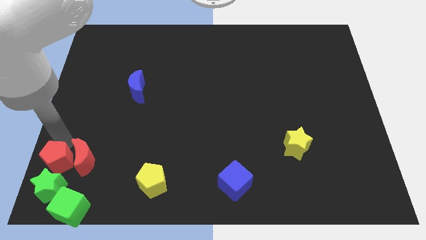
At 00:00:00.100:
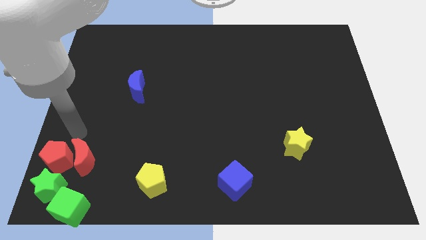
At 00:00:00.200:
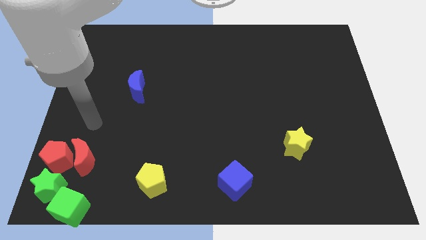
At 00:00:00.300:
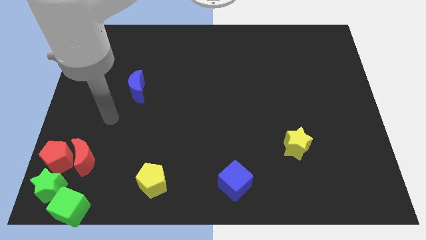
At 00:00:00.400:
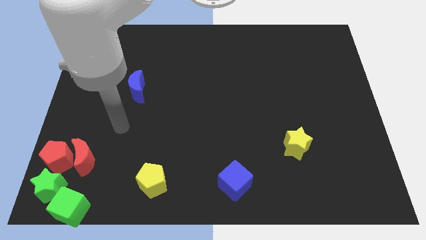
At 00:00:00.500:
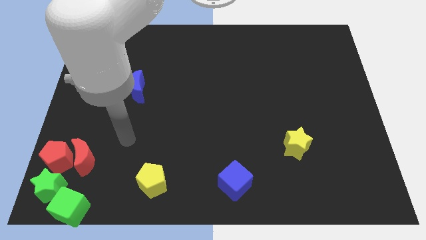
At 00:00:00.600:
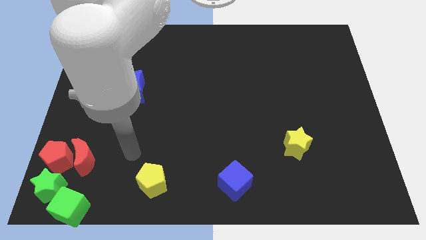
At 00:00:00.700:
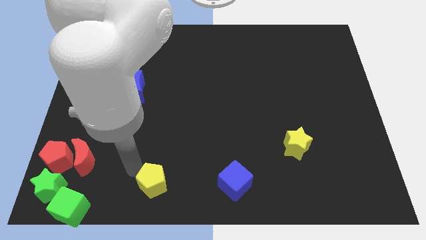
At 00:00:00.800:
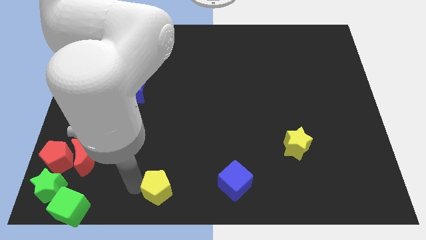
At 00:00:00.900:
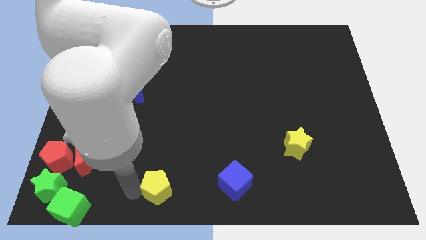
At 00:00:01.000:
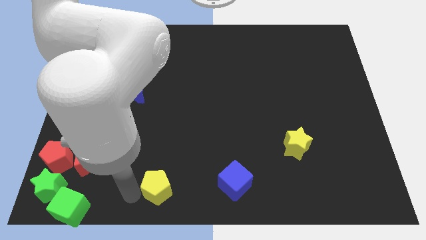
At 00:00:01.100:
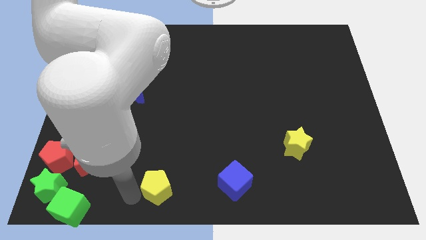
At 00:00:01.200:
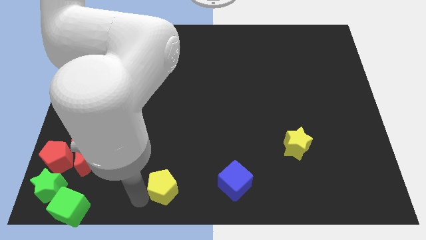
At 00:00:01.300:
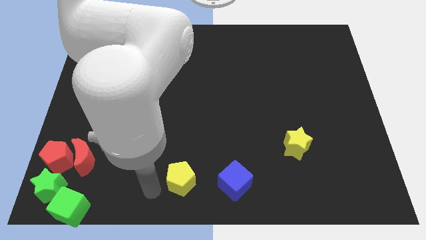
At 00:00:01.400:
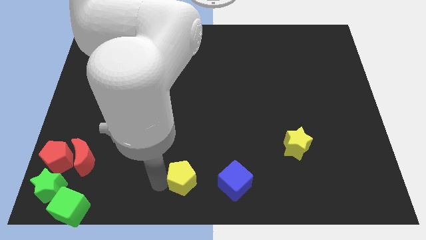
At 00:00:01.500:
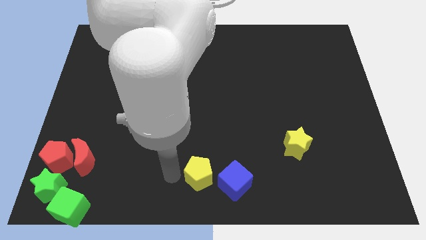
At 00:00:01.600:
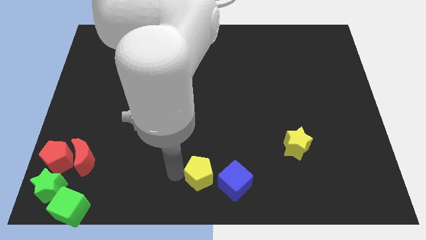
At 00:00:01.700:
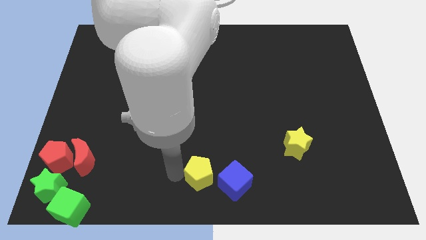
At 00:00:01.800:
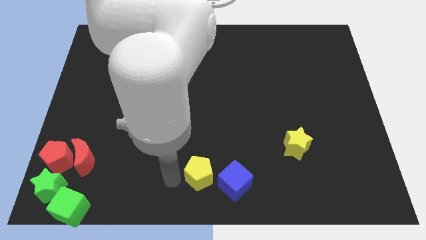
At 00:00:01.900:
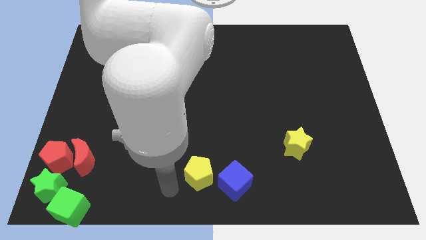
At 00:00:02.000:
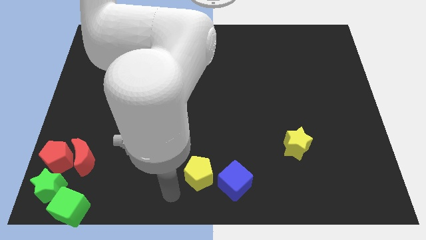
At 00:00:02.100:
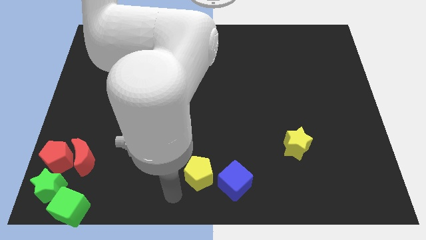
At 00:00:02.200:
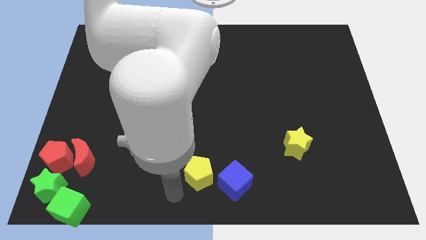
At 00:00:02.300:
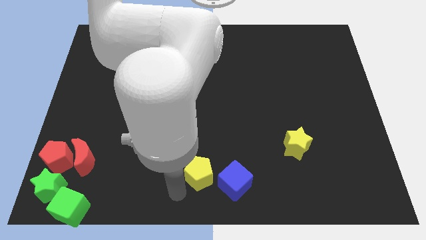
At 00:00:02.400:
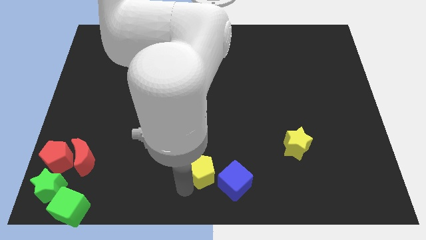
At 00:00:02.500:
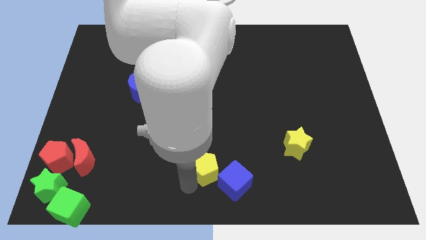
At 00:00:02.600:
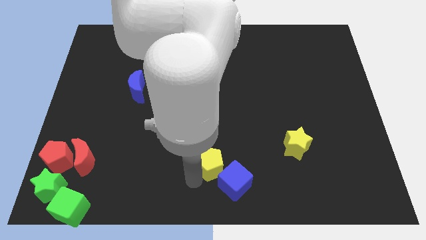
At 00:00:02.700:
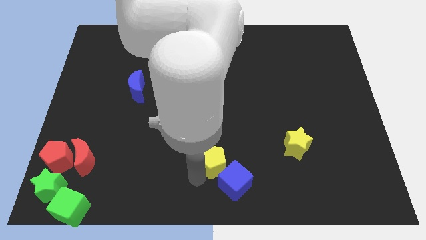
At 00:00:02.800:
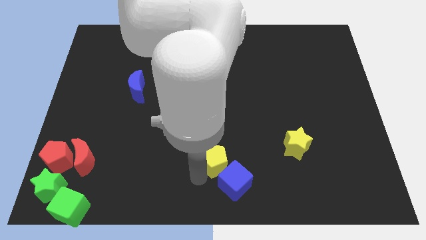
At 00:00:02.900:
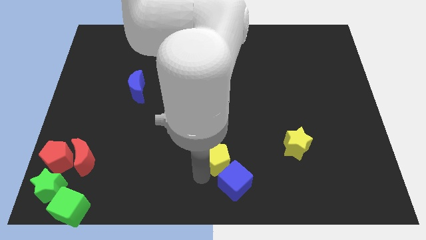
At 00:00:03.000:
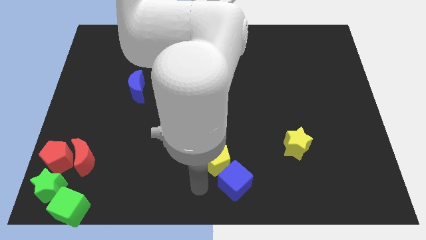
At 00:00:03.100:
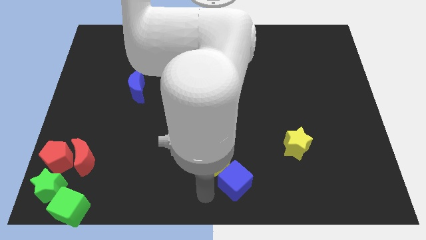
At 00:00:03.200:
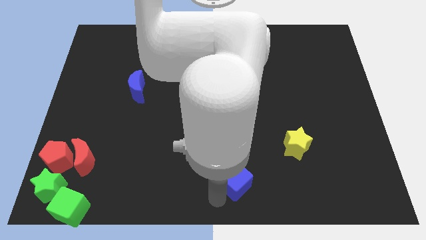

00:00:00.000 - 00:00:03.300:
push yellow pentagon close to the blue cube

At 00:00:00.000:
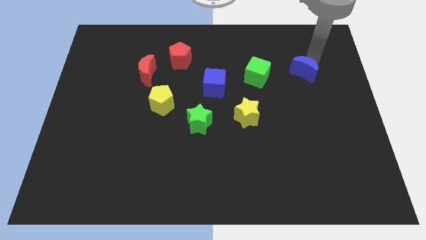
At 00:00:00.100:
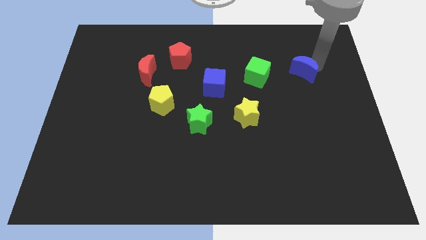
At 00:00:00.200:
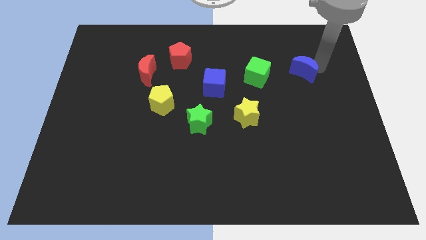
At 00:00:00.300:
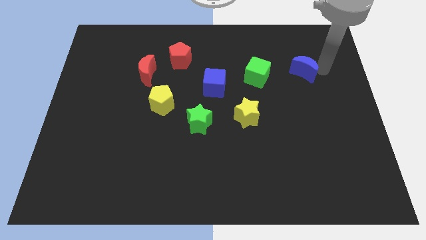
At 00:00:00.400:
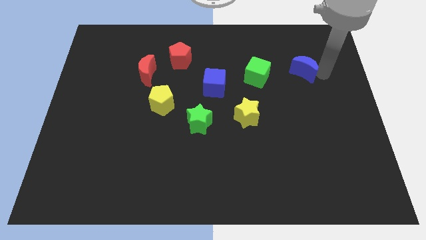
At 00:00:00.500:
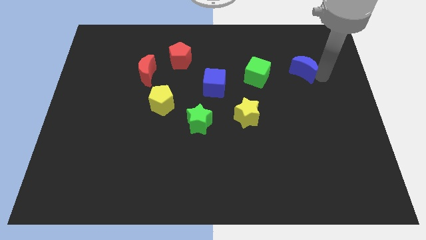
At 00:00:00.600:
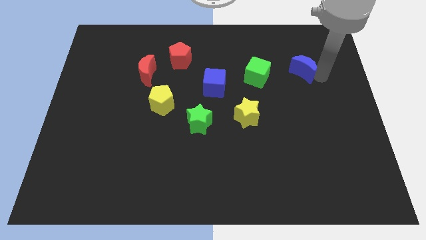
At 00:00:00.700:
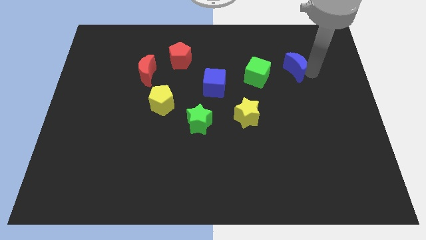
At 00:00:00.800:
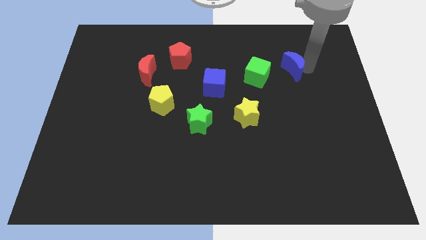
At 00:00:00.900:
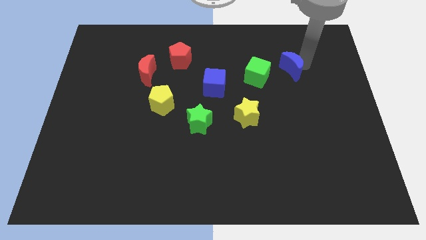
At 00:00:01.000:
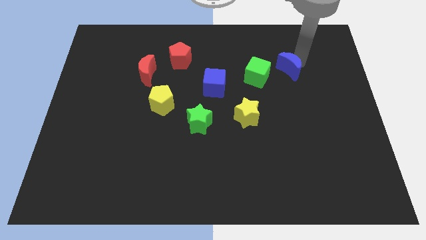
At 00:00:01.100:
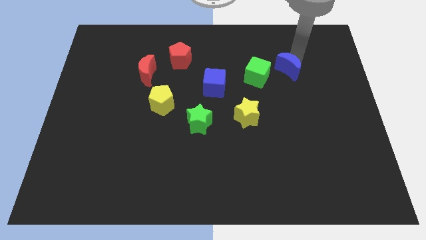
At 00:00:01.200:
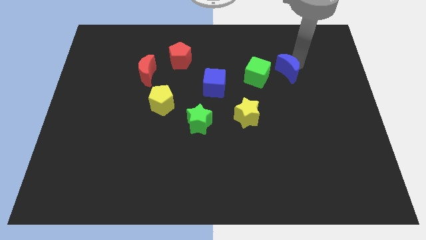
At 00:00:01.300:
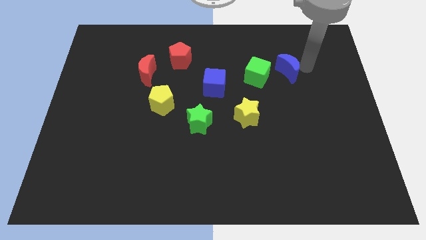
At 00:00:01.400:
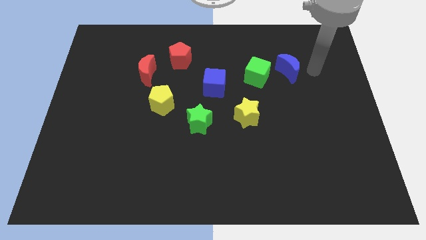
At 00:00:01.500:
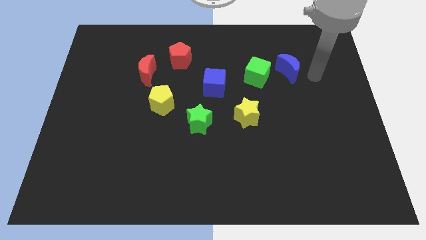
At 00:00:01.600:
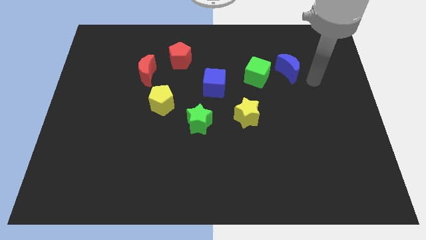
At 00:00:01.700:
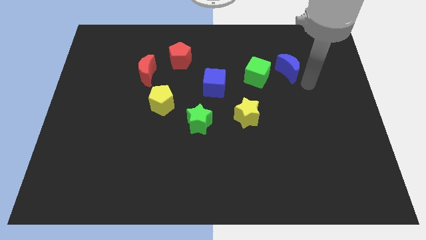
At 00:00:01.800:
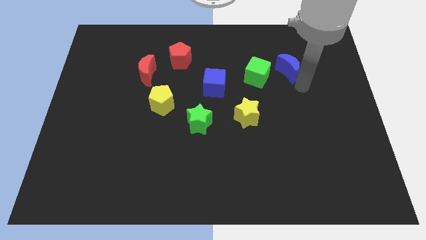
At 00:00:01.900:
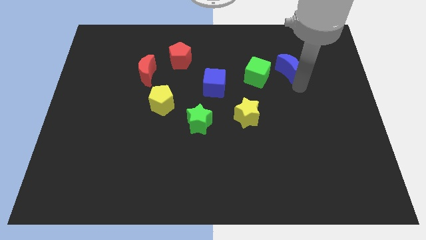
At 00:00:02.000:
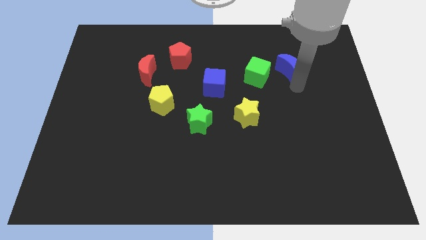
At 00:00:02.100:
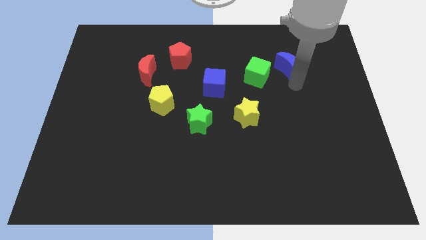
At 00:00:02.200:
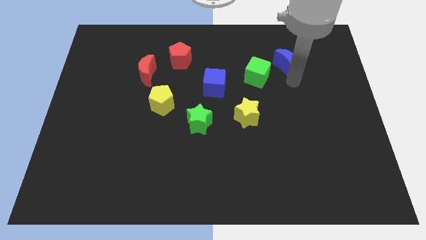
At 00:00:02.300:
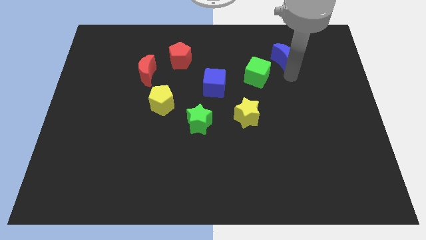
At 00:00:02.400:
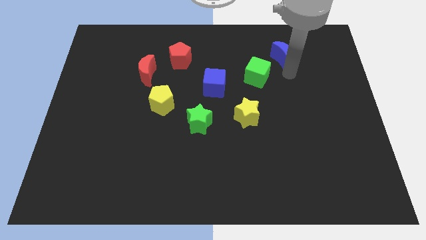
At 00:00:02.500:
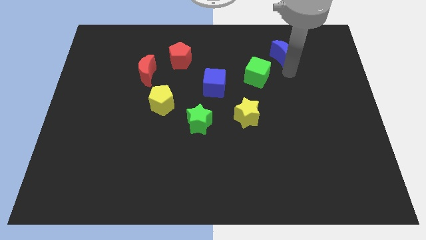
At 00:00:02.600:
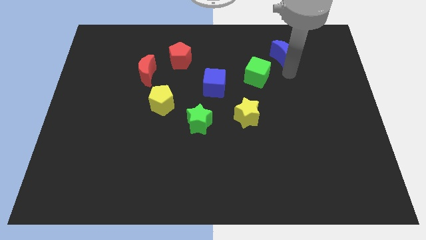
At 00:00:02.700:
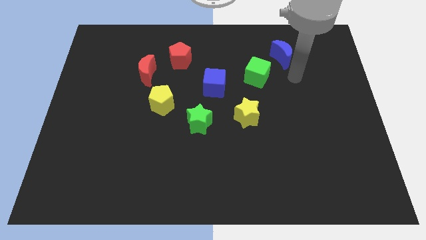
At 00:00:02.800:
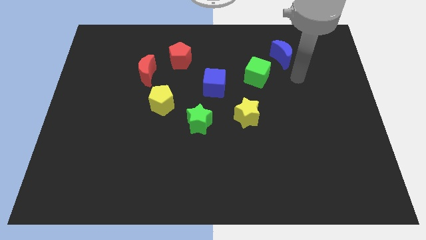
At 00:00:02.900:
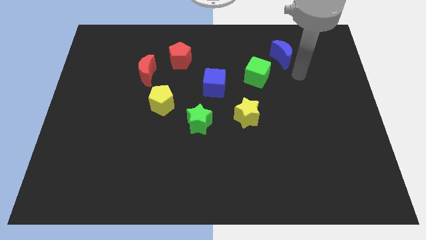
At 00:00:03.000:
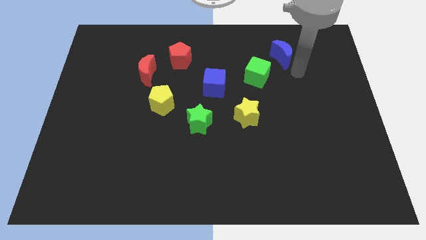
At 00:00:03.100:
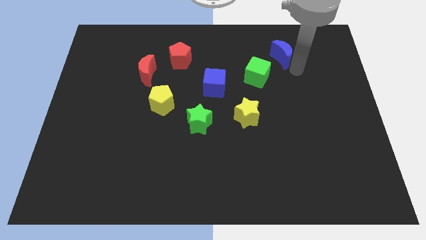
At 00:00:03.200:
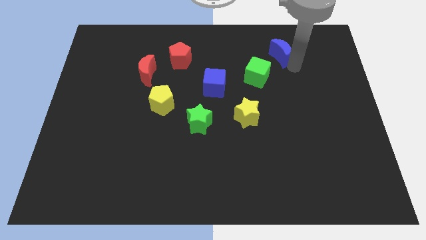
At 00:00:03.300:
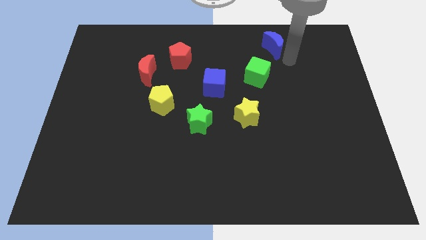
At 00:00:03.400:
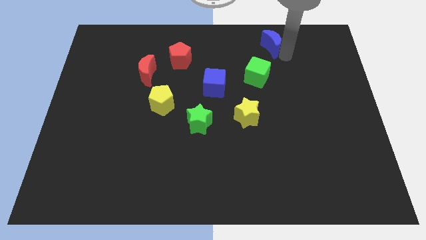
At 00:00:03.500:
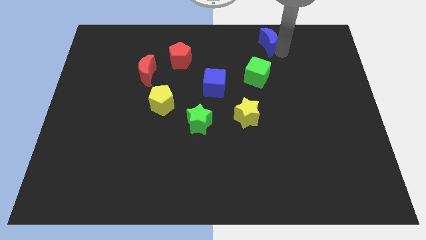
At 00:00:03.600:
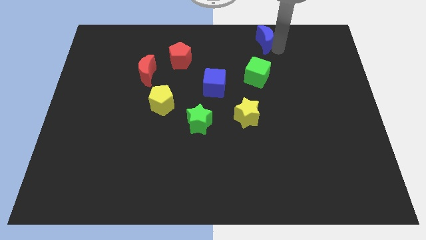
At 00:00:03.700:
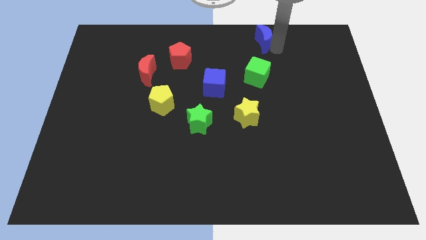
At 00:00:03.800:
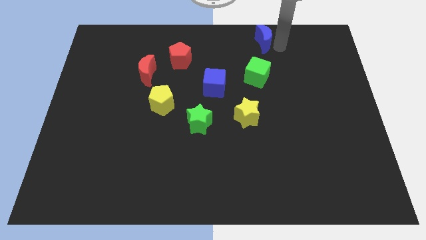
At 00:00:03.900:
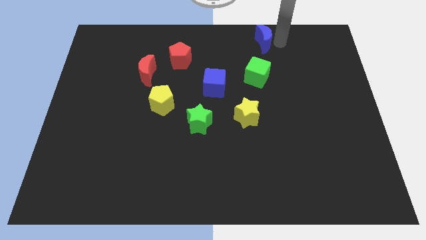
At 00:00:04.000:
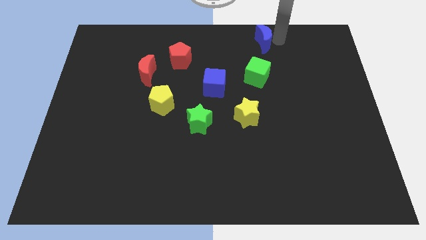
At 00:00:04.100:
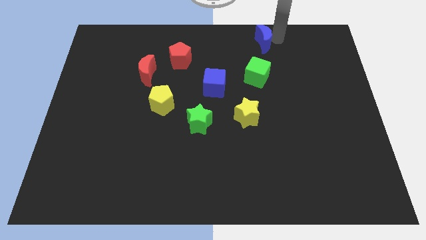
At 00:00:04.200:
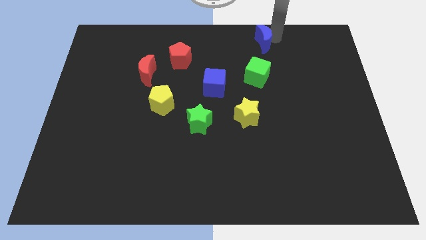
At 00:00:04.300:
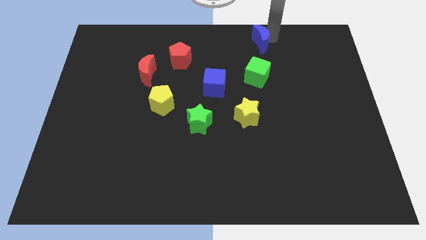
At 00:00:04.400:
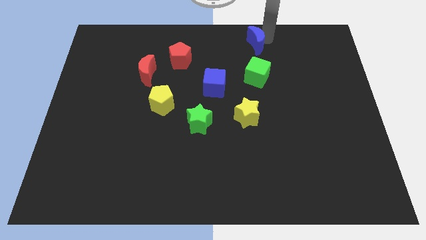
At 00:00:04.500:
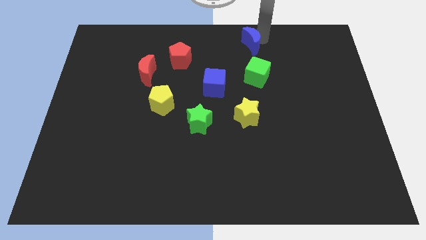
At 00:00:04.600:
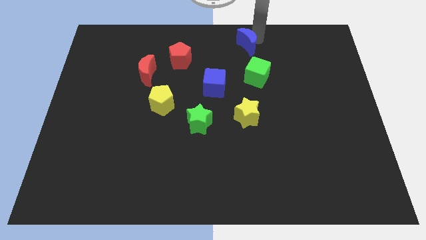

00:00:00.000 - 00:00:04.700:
place the blue crescent at the top of the green cube

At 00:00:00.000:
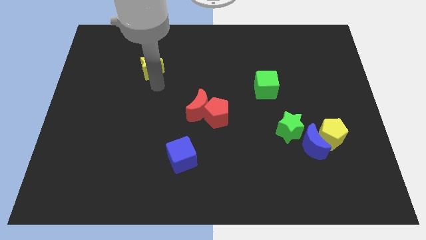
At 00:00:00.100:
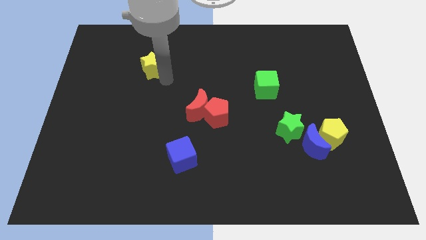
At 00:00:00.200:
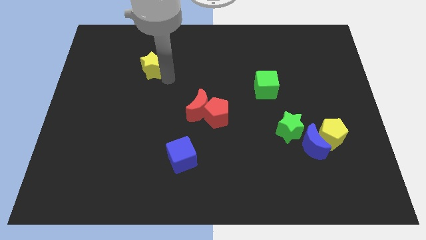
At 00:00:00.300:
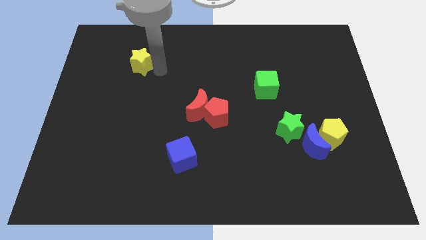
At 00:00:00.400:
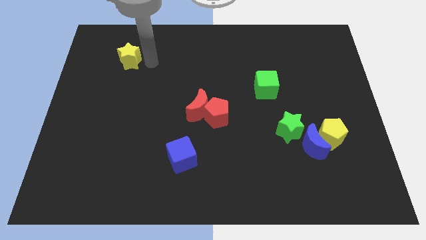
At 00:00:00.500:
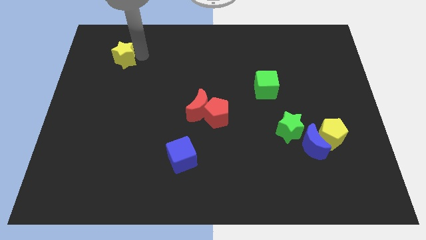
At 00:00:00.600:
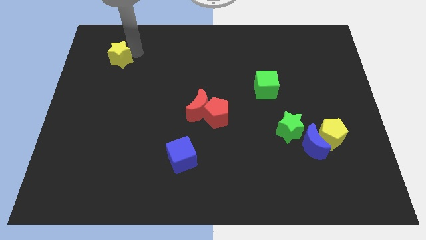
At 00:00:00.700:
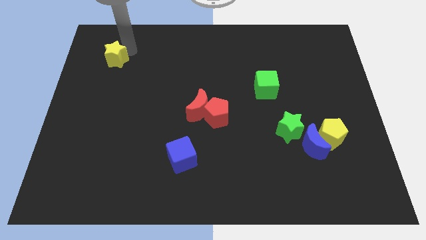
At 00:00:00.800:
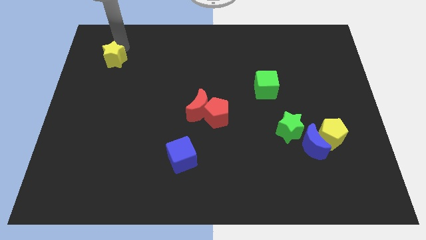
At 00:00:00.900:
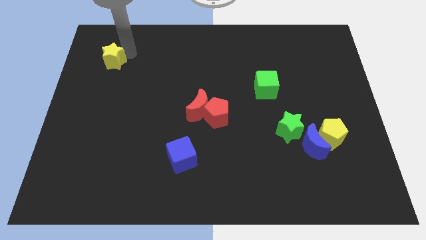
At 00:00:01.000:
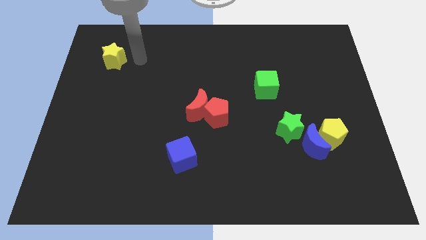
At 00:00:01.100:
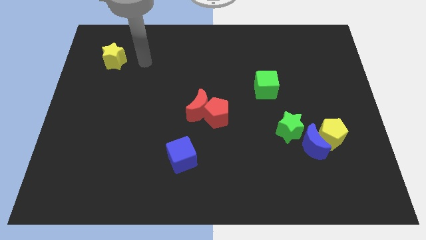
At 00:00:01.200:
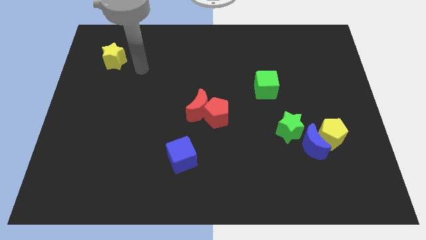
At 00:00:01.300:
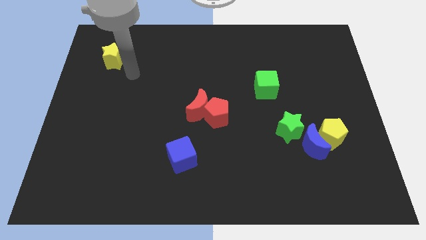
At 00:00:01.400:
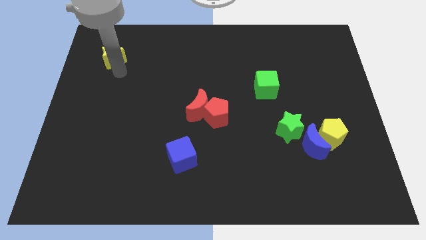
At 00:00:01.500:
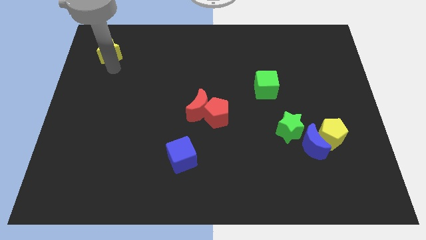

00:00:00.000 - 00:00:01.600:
push the yellow star towards the left top corner of the board
